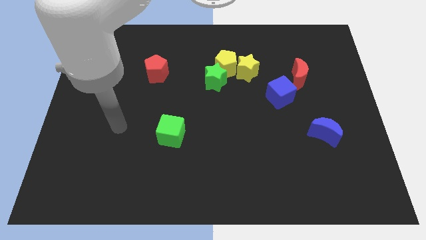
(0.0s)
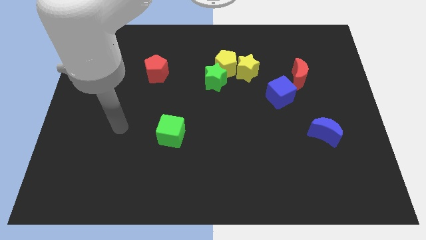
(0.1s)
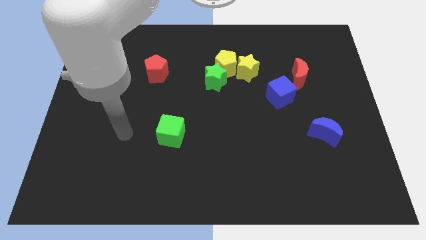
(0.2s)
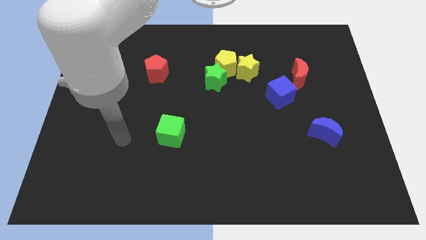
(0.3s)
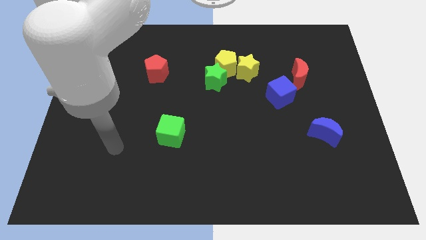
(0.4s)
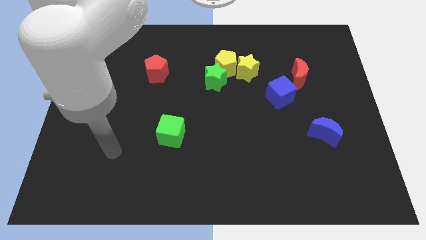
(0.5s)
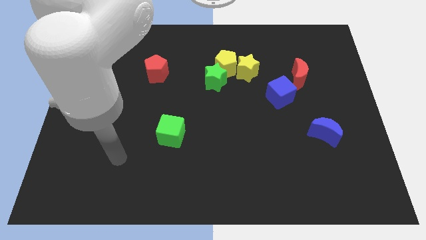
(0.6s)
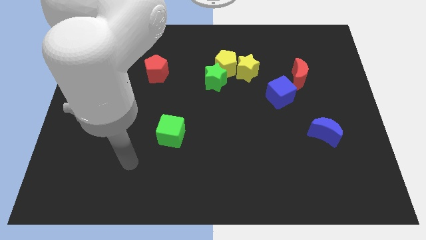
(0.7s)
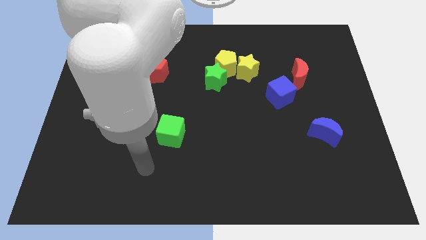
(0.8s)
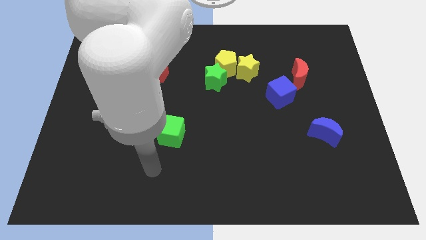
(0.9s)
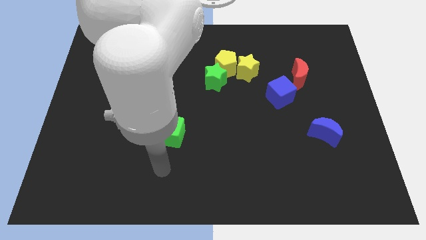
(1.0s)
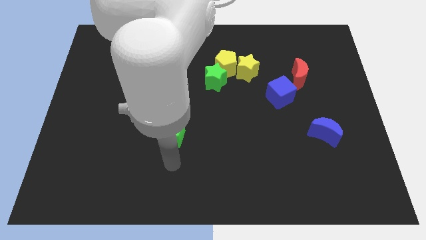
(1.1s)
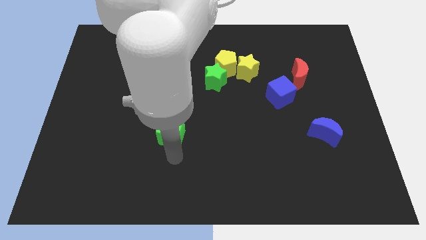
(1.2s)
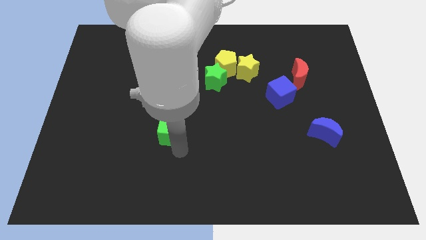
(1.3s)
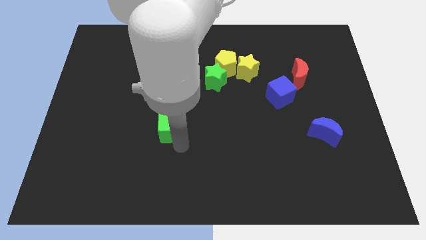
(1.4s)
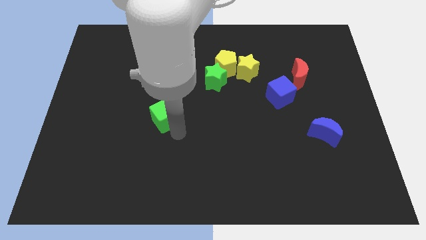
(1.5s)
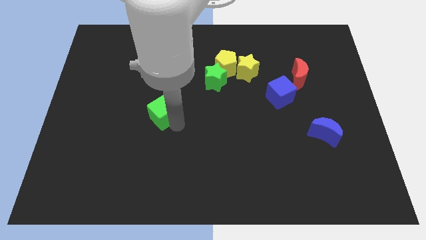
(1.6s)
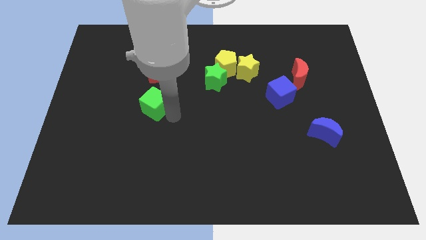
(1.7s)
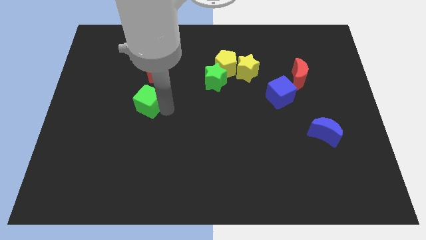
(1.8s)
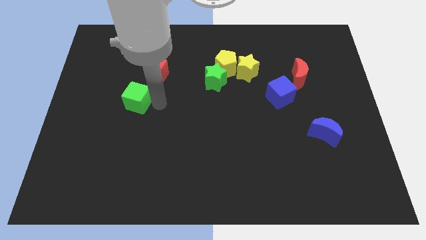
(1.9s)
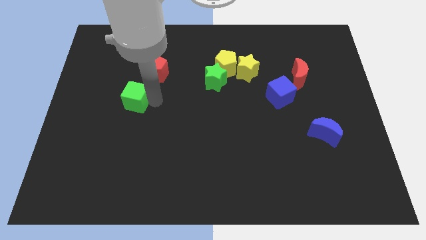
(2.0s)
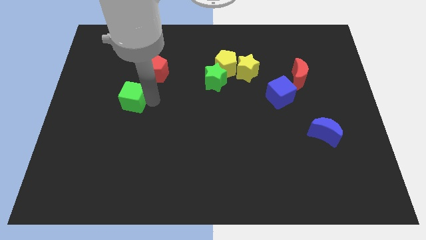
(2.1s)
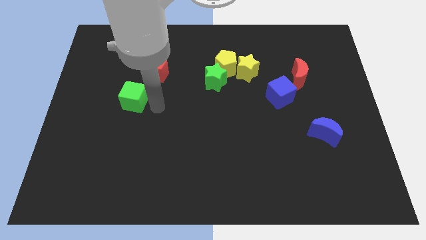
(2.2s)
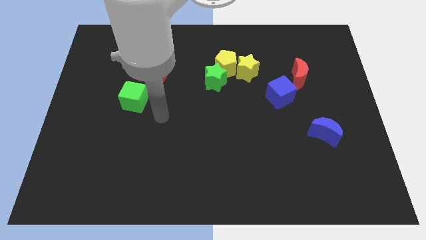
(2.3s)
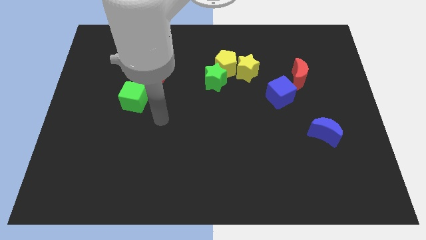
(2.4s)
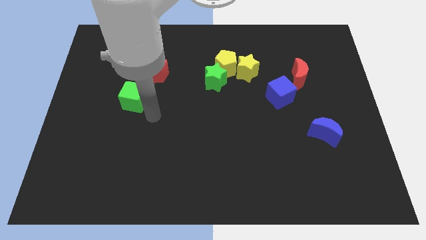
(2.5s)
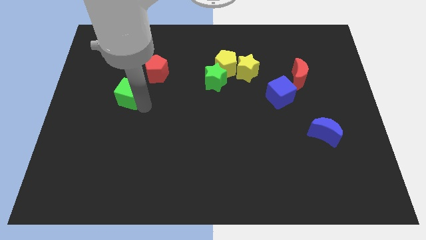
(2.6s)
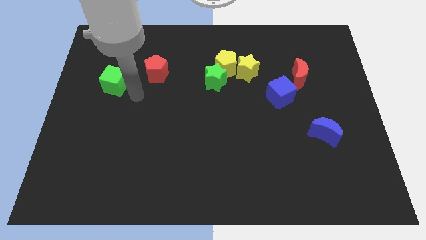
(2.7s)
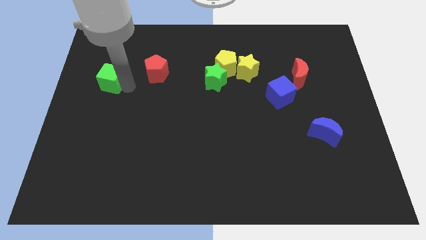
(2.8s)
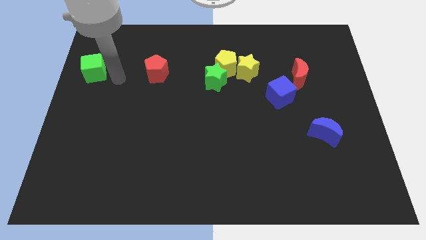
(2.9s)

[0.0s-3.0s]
move the green cube to the left of the red pentagon

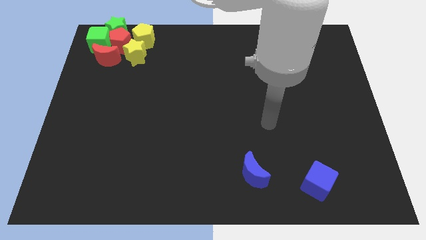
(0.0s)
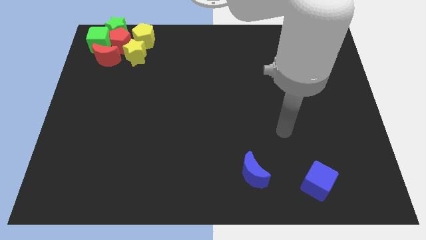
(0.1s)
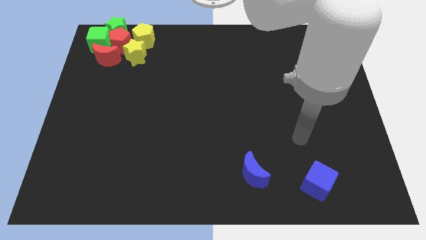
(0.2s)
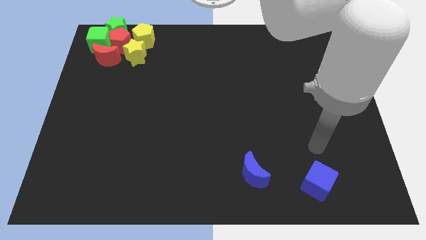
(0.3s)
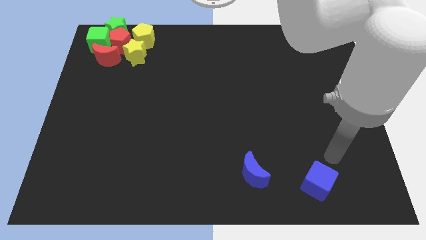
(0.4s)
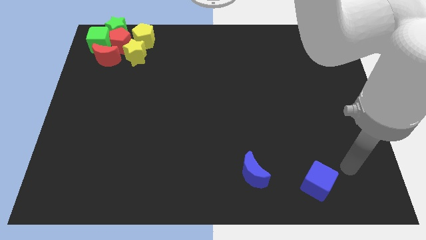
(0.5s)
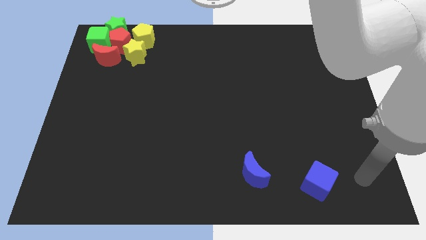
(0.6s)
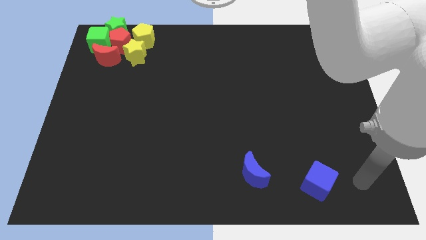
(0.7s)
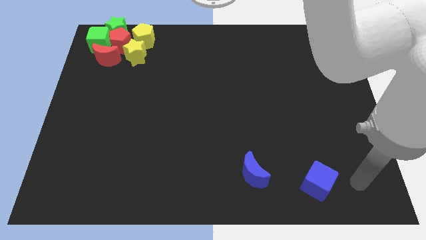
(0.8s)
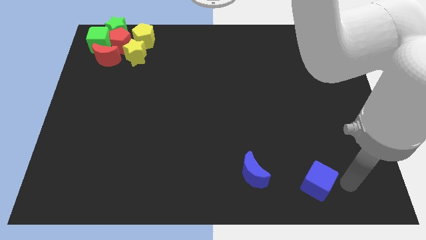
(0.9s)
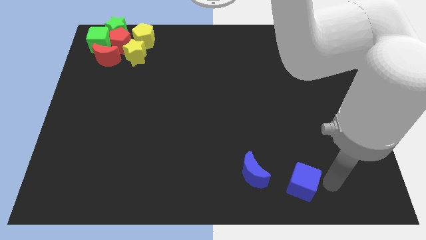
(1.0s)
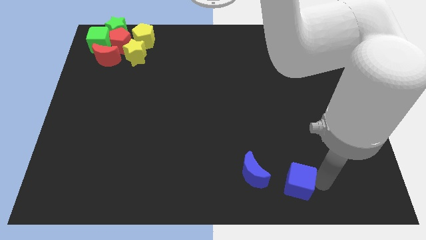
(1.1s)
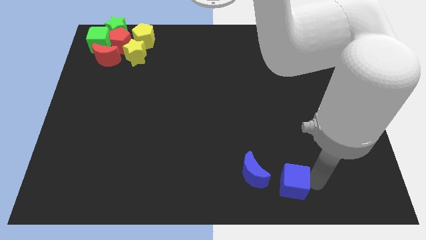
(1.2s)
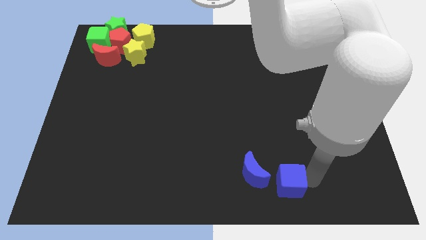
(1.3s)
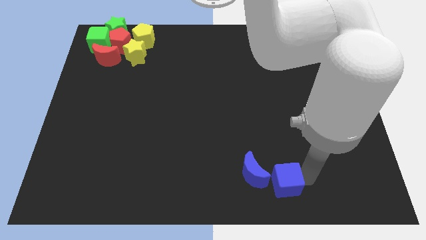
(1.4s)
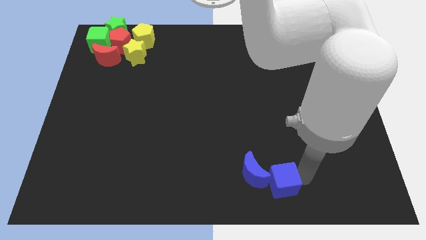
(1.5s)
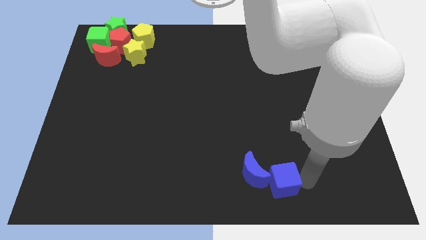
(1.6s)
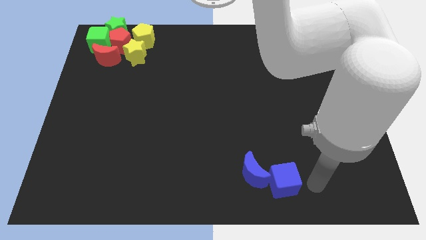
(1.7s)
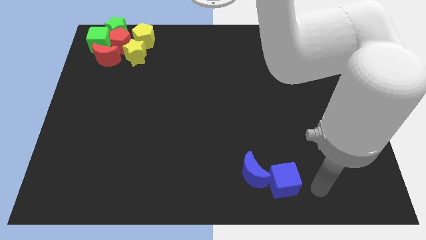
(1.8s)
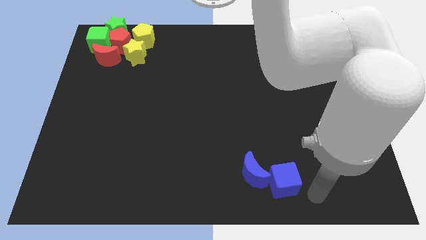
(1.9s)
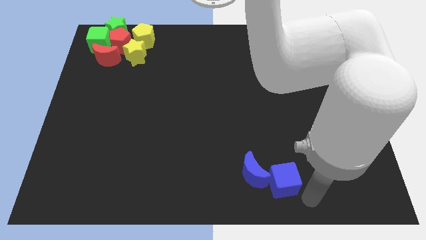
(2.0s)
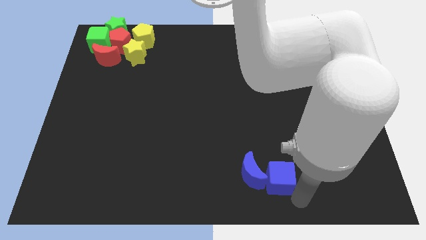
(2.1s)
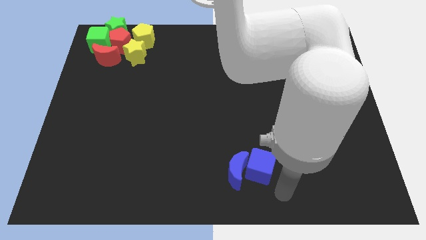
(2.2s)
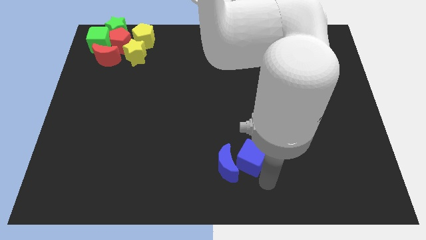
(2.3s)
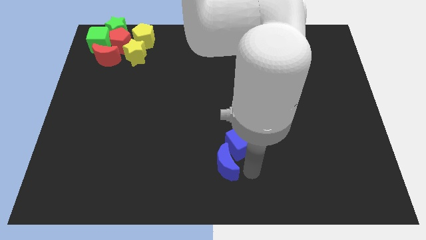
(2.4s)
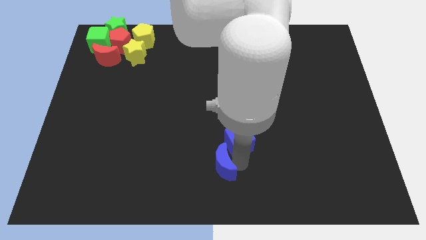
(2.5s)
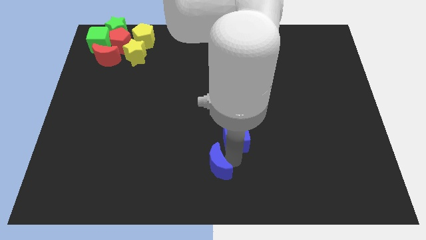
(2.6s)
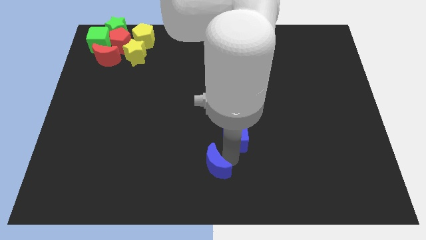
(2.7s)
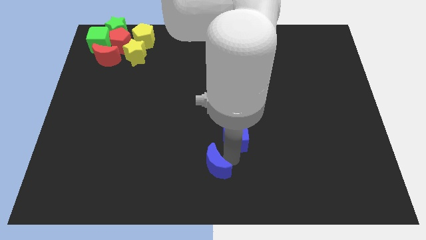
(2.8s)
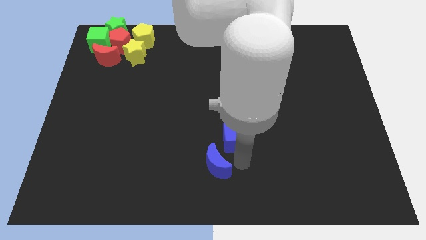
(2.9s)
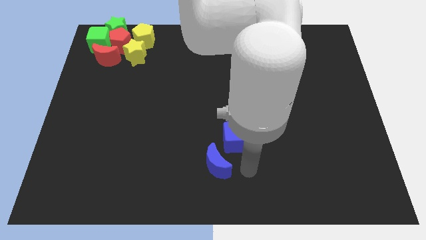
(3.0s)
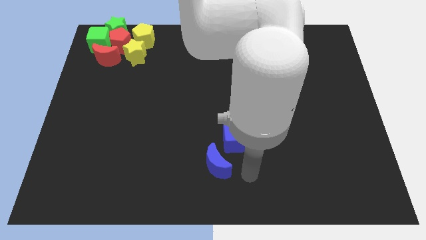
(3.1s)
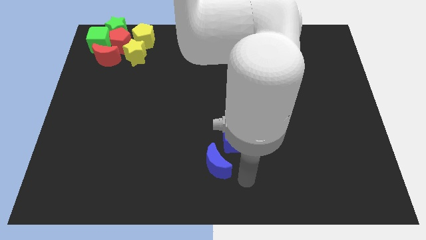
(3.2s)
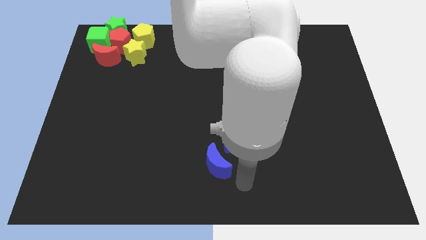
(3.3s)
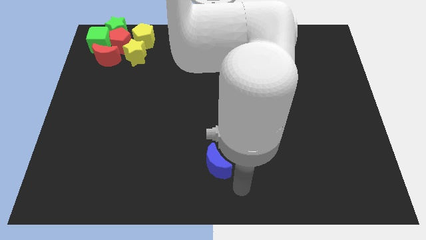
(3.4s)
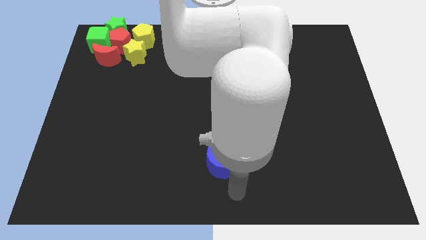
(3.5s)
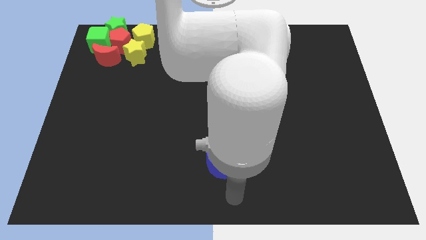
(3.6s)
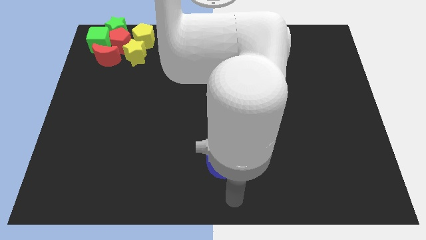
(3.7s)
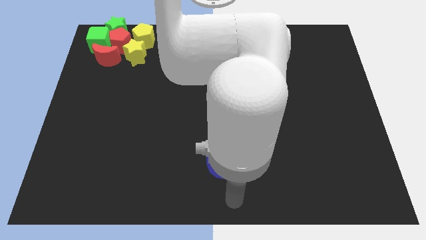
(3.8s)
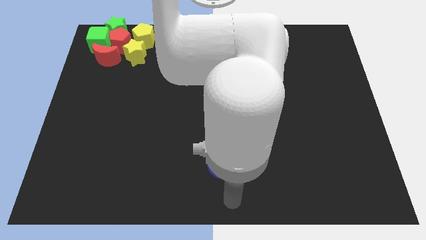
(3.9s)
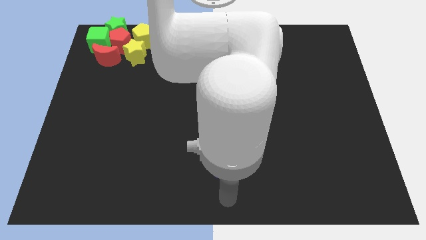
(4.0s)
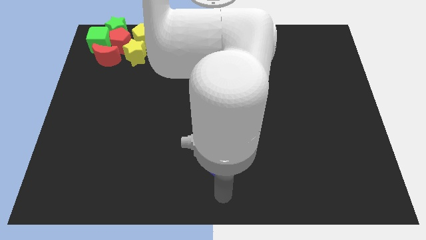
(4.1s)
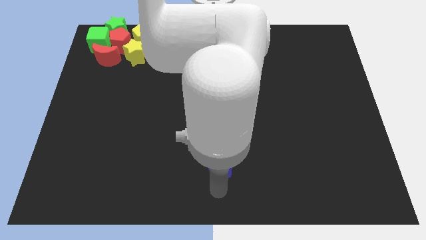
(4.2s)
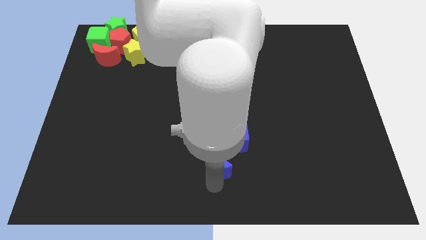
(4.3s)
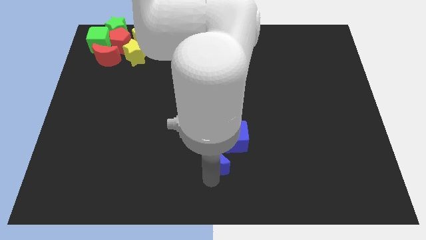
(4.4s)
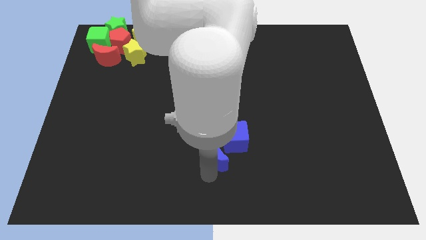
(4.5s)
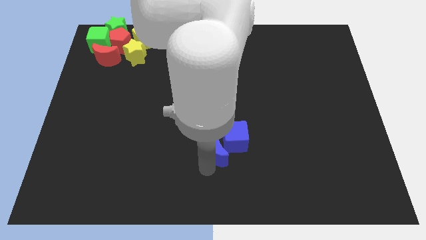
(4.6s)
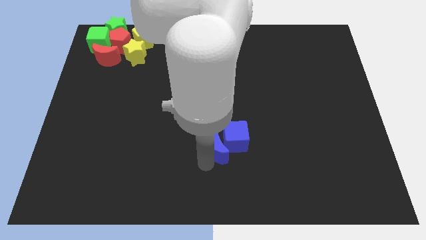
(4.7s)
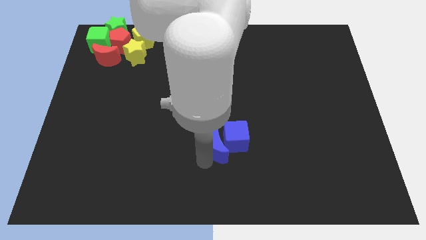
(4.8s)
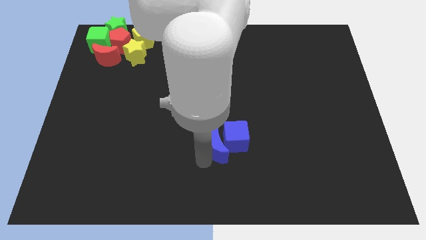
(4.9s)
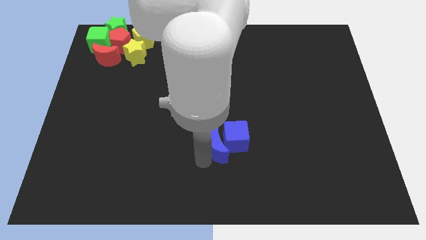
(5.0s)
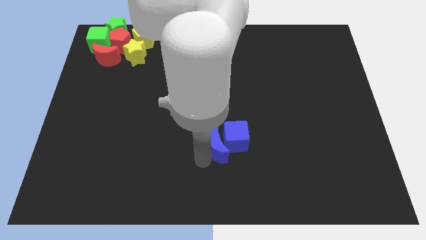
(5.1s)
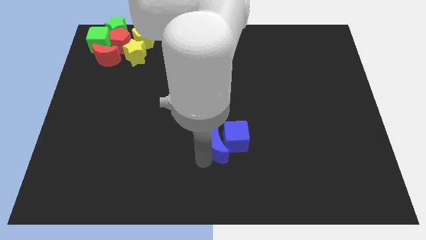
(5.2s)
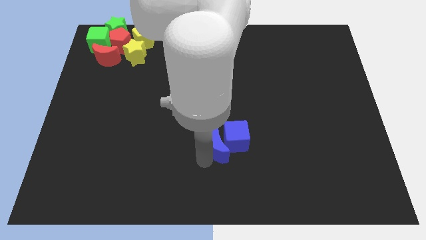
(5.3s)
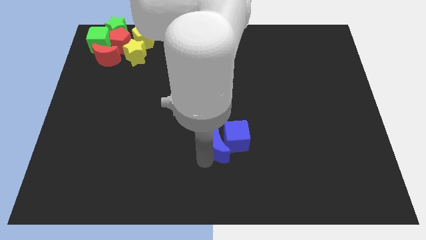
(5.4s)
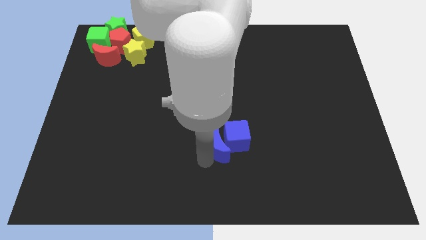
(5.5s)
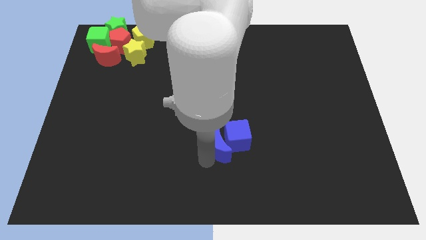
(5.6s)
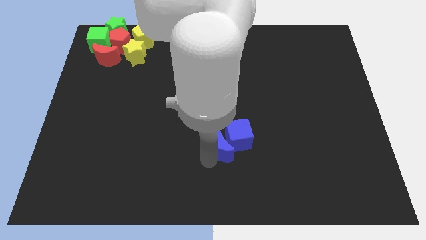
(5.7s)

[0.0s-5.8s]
push both the blue blocks diagonally on the bottom right side of the group of blocks
